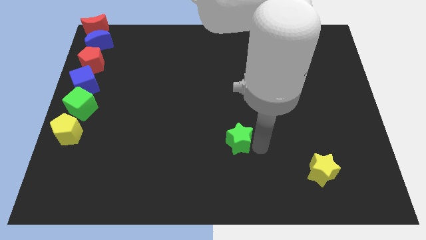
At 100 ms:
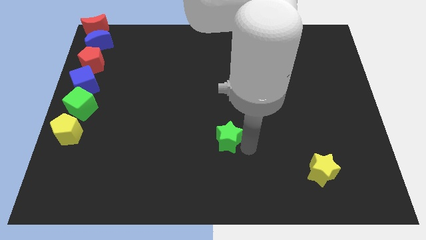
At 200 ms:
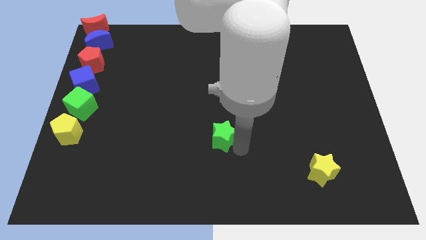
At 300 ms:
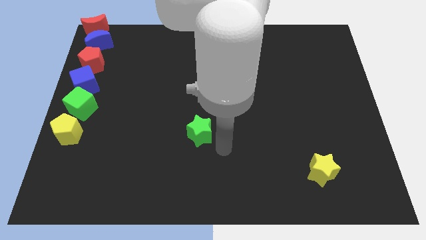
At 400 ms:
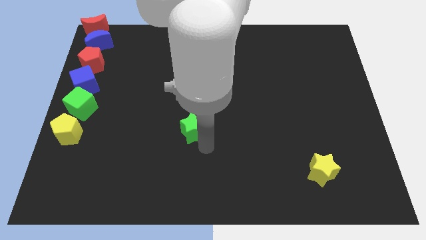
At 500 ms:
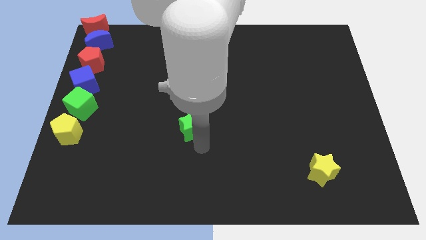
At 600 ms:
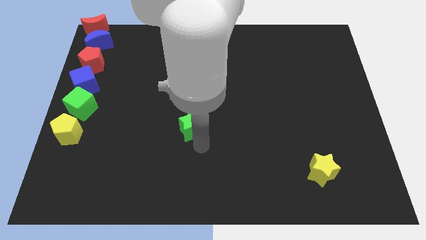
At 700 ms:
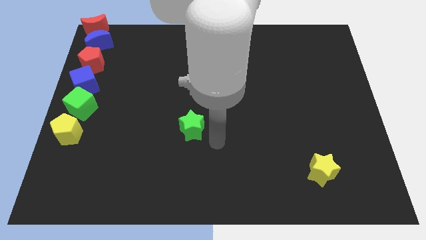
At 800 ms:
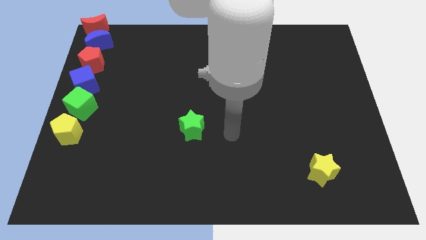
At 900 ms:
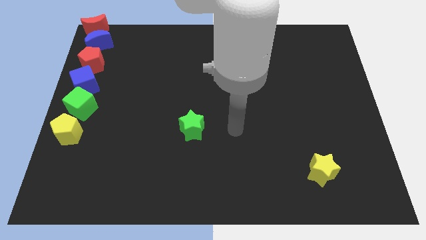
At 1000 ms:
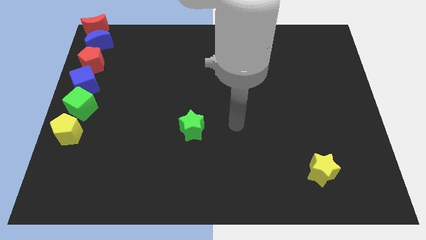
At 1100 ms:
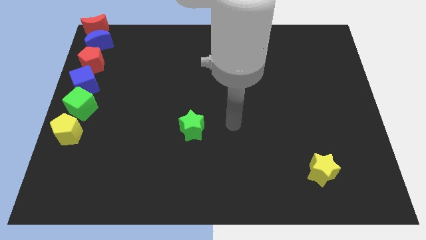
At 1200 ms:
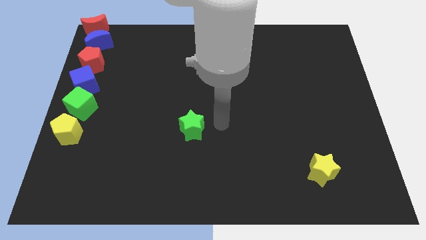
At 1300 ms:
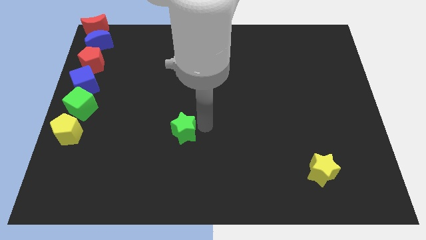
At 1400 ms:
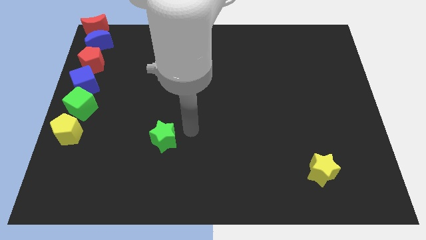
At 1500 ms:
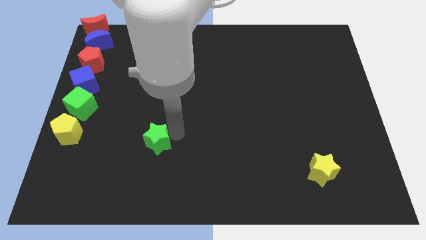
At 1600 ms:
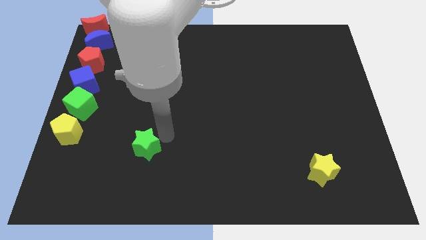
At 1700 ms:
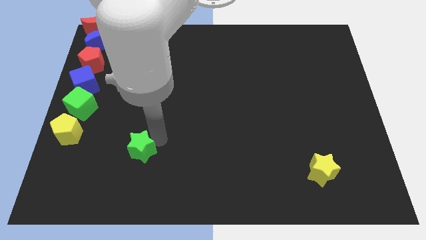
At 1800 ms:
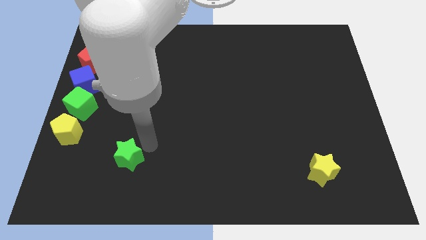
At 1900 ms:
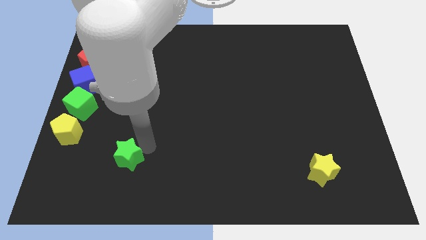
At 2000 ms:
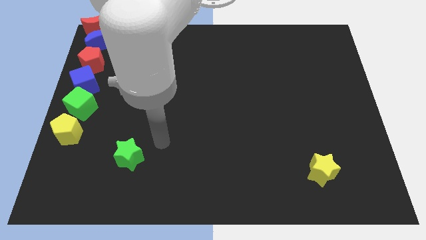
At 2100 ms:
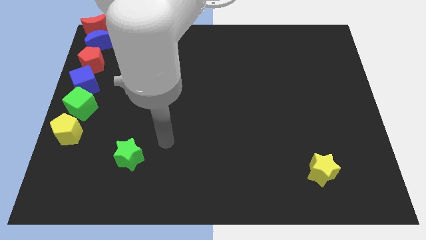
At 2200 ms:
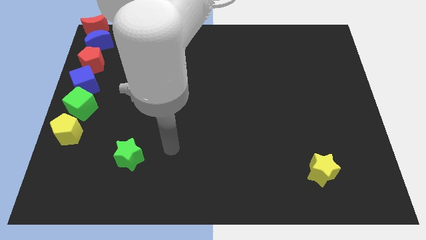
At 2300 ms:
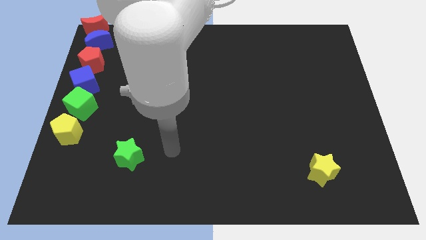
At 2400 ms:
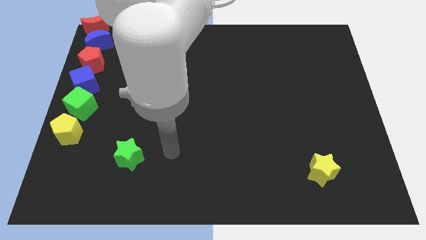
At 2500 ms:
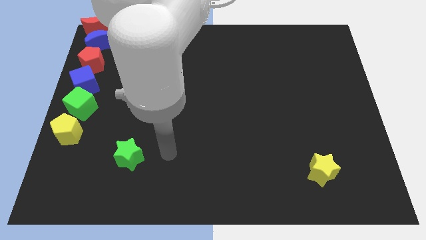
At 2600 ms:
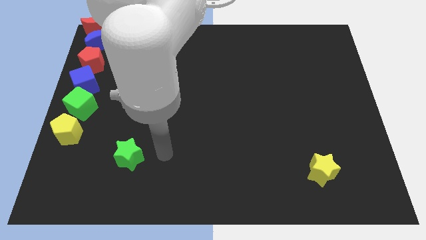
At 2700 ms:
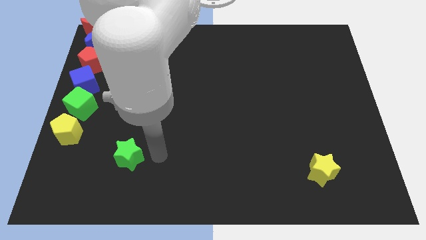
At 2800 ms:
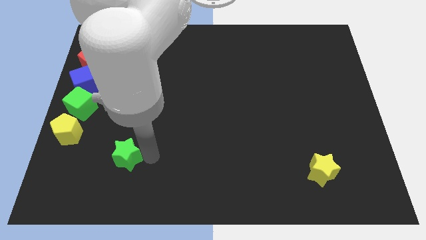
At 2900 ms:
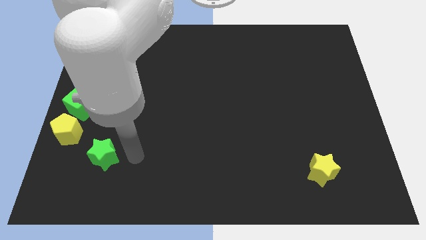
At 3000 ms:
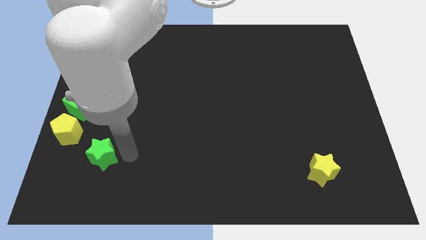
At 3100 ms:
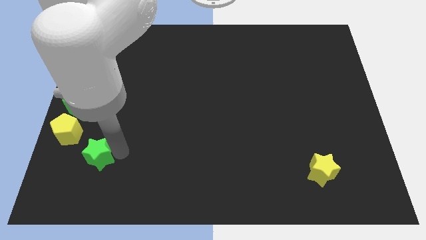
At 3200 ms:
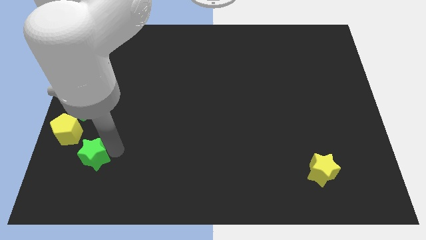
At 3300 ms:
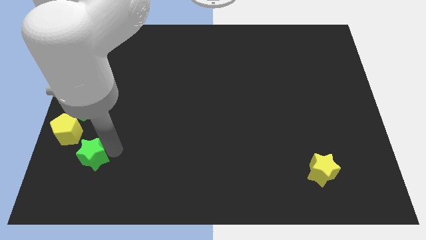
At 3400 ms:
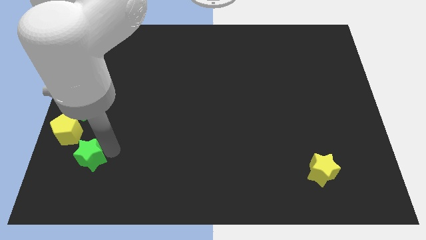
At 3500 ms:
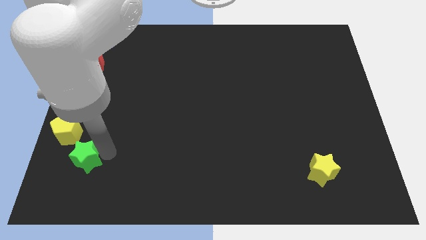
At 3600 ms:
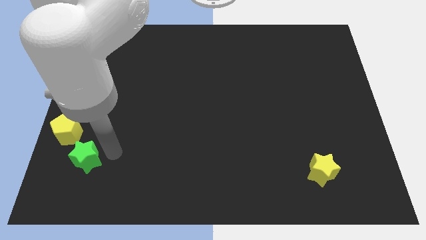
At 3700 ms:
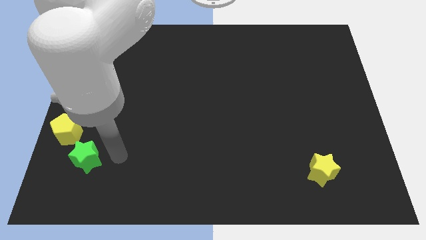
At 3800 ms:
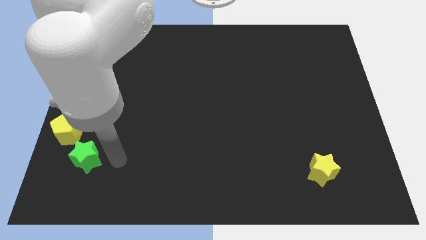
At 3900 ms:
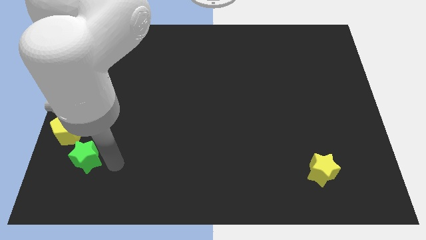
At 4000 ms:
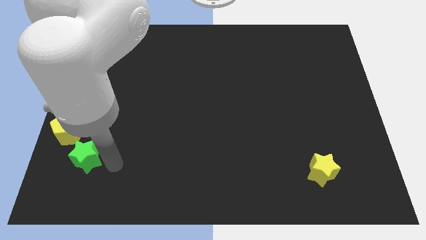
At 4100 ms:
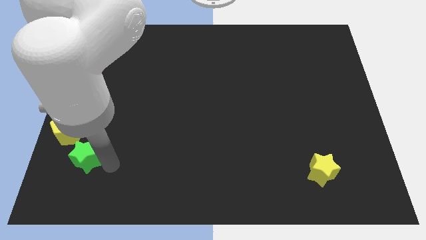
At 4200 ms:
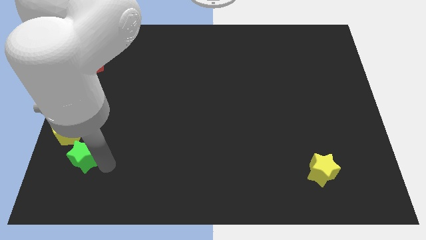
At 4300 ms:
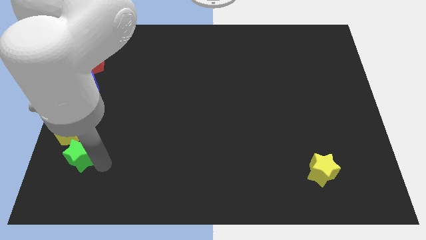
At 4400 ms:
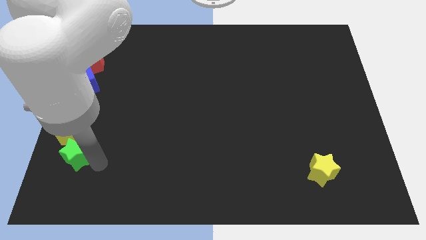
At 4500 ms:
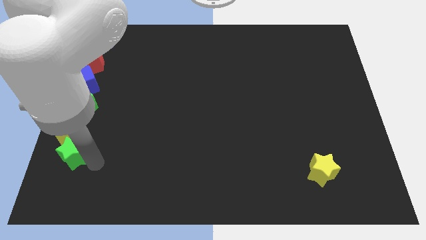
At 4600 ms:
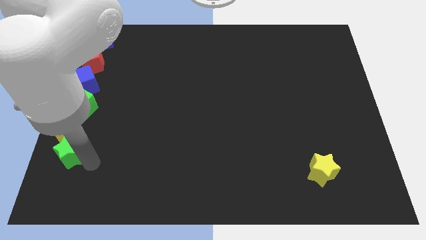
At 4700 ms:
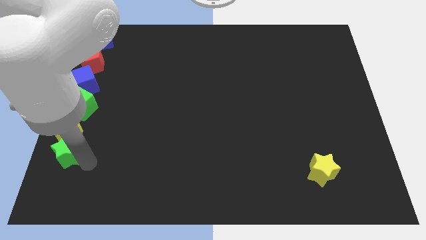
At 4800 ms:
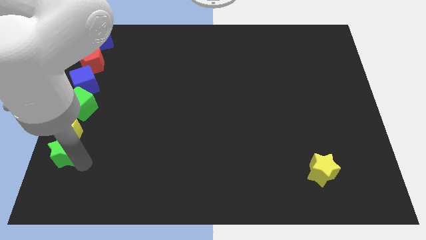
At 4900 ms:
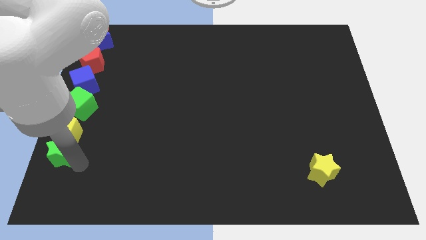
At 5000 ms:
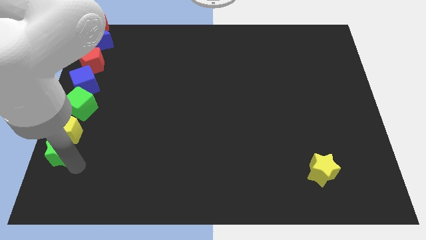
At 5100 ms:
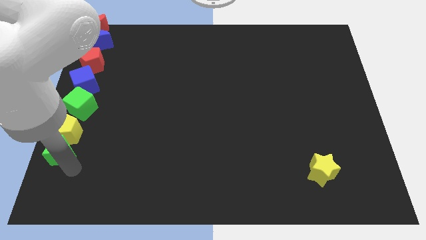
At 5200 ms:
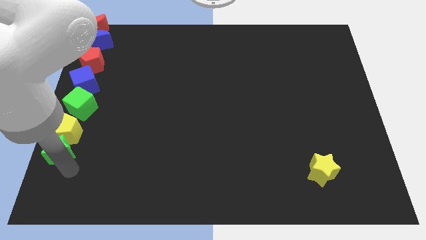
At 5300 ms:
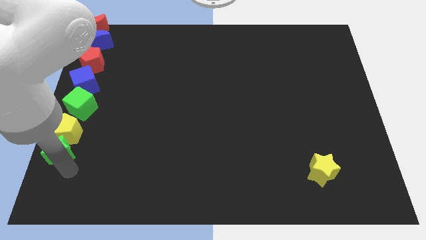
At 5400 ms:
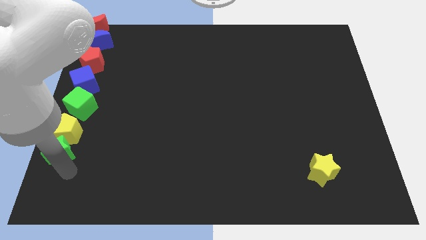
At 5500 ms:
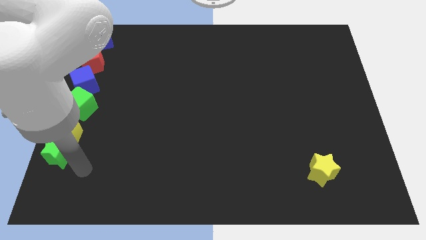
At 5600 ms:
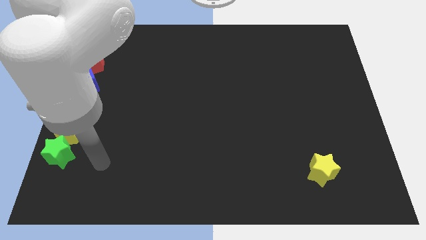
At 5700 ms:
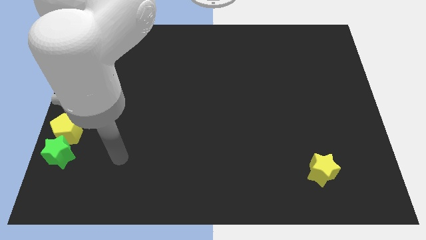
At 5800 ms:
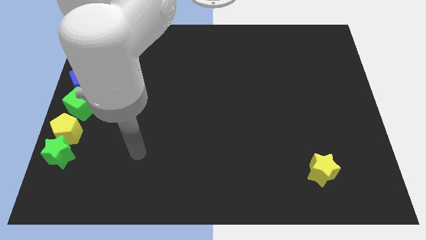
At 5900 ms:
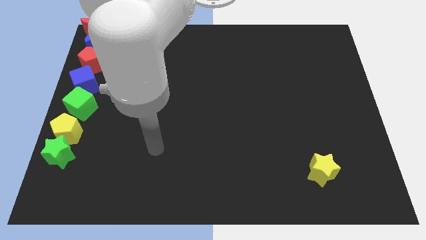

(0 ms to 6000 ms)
place green star down to the yellow pentagon

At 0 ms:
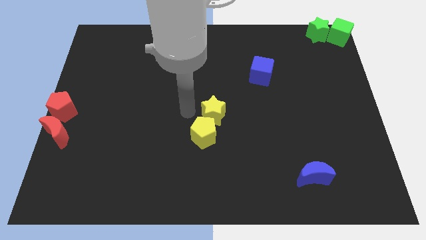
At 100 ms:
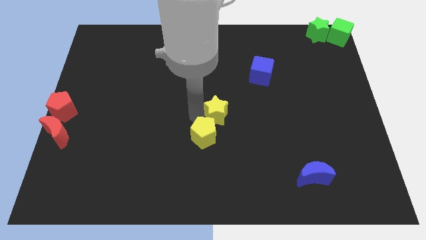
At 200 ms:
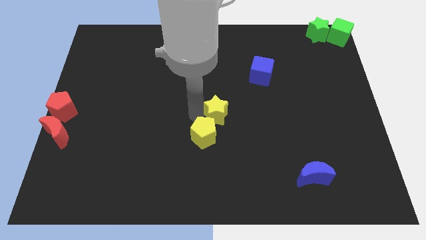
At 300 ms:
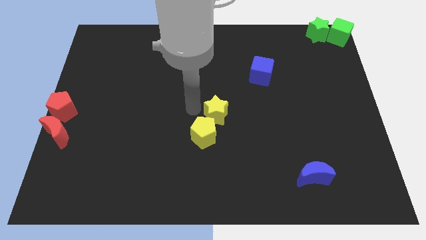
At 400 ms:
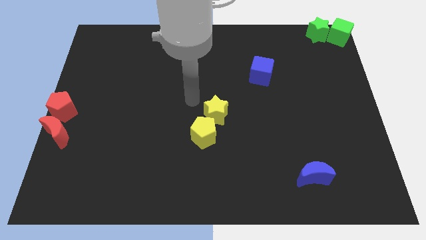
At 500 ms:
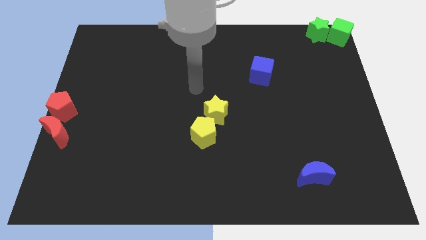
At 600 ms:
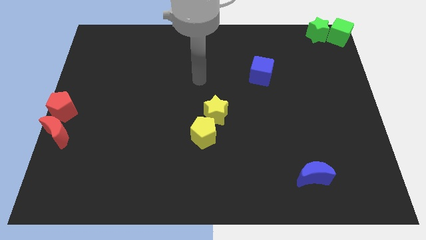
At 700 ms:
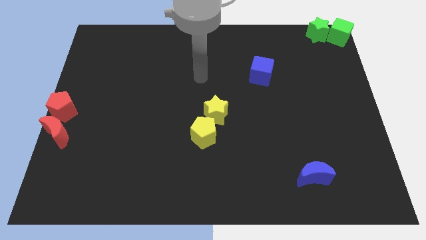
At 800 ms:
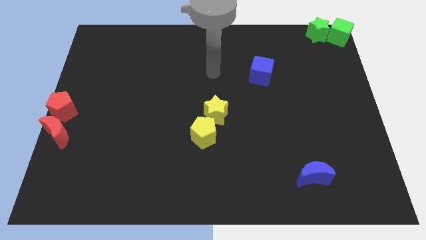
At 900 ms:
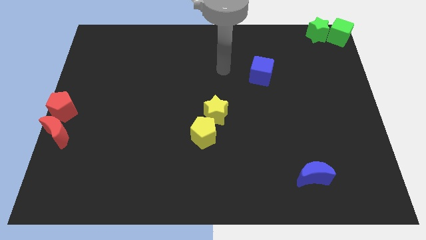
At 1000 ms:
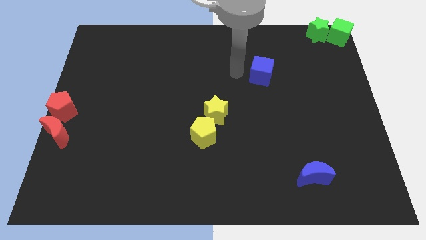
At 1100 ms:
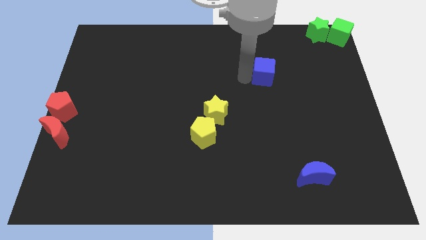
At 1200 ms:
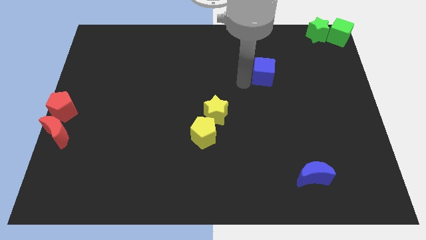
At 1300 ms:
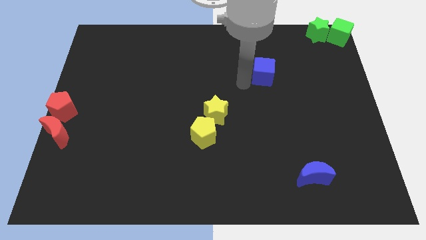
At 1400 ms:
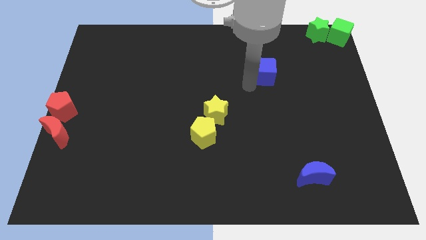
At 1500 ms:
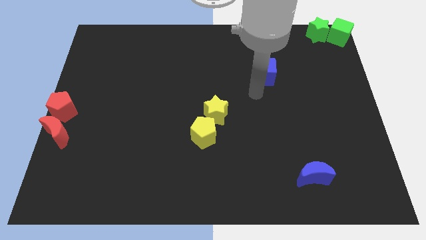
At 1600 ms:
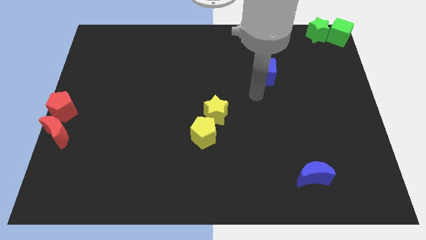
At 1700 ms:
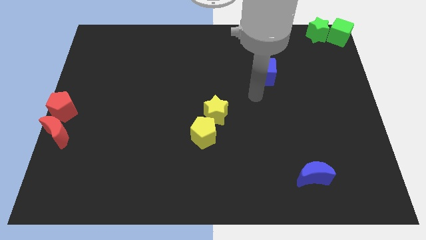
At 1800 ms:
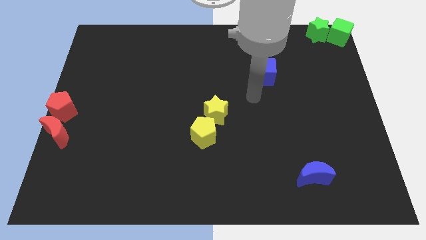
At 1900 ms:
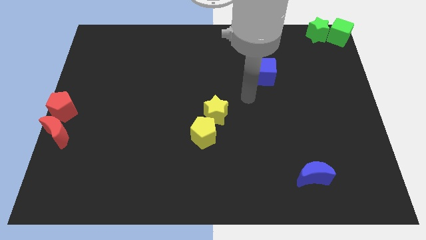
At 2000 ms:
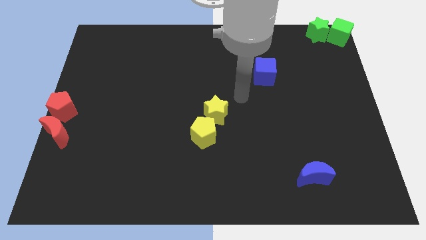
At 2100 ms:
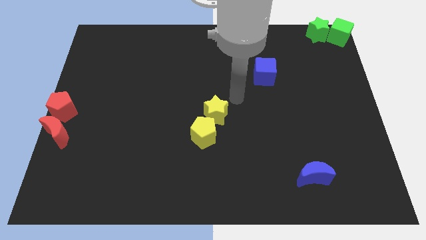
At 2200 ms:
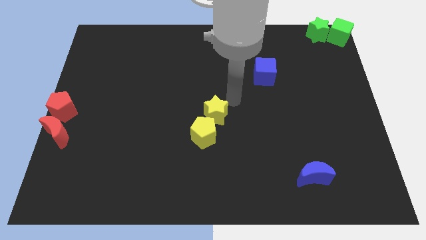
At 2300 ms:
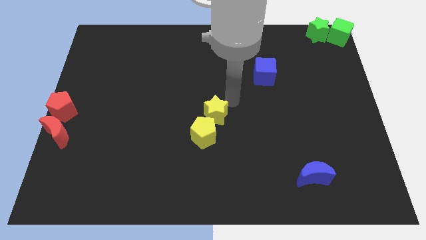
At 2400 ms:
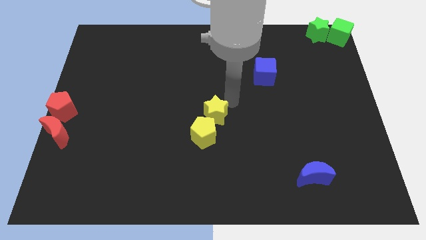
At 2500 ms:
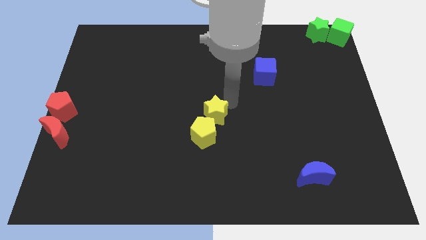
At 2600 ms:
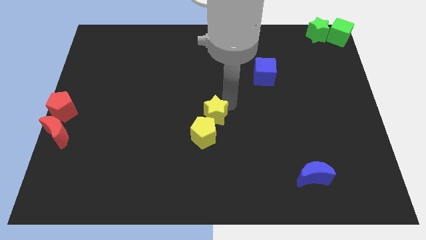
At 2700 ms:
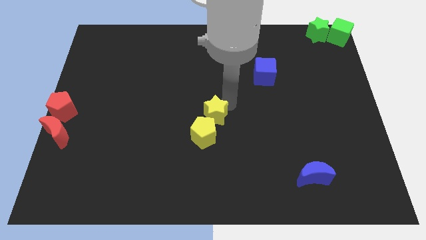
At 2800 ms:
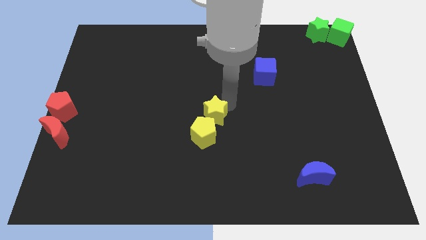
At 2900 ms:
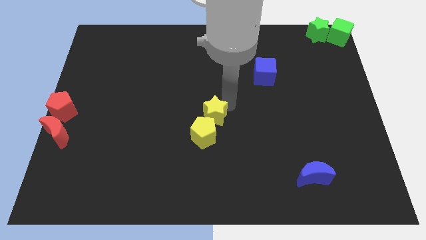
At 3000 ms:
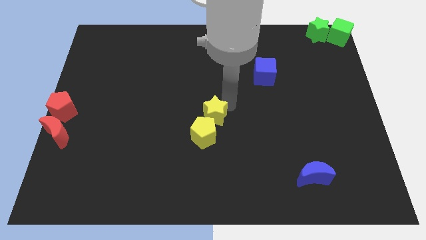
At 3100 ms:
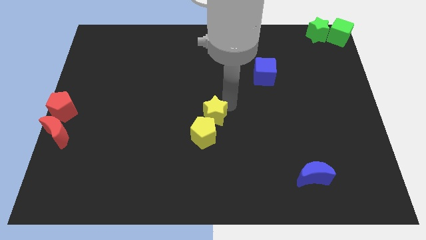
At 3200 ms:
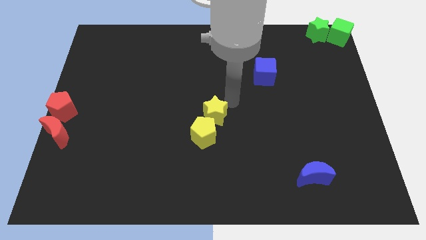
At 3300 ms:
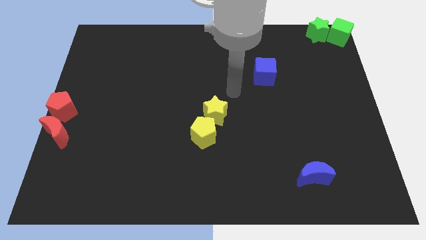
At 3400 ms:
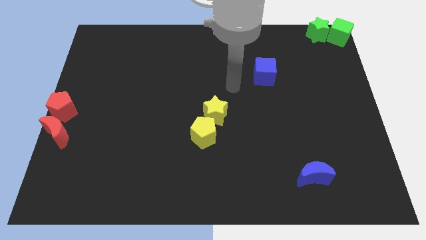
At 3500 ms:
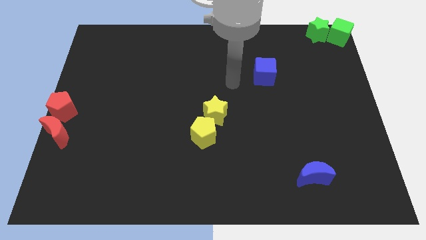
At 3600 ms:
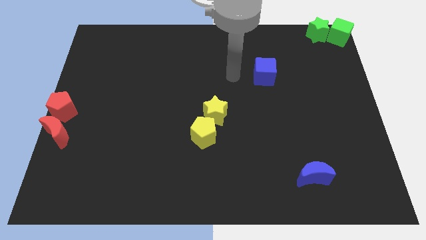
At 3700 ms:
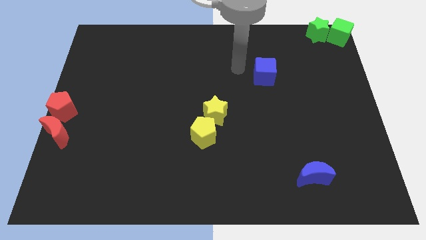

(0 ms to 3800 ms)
place your arm at the left side of the blue cube
